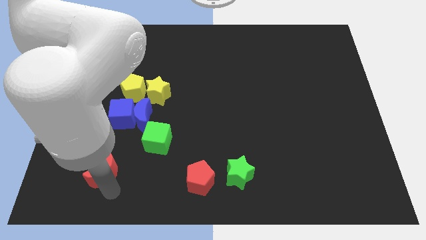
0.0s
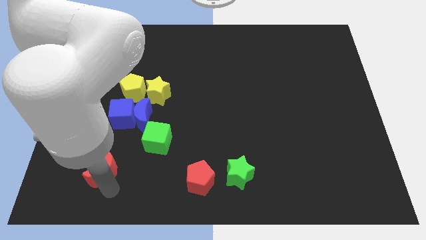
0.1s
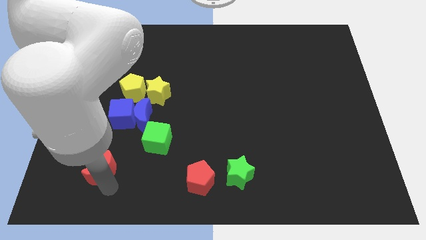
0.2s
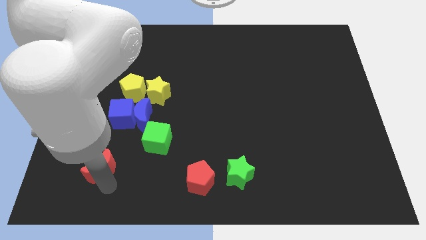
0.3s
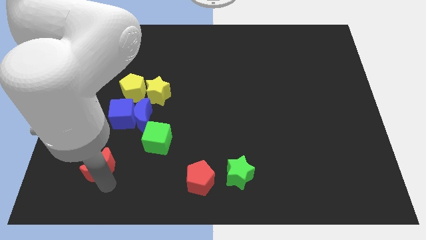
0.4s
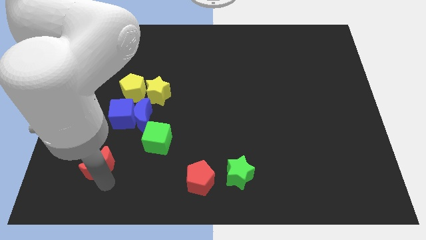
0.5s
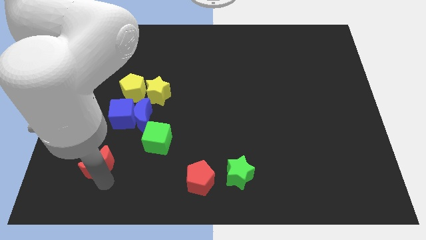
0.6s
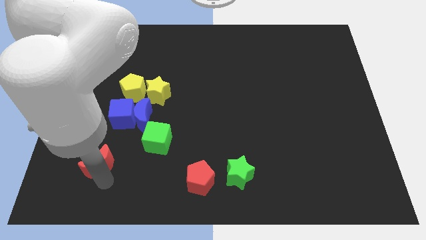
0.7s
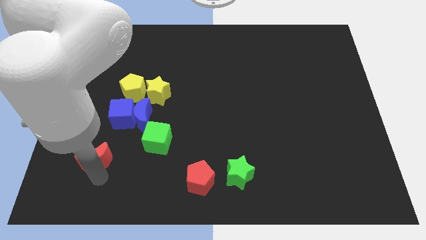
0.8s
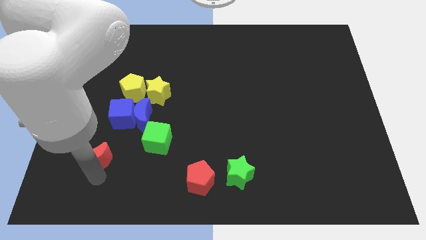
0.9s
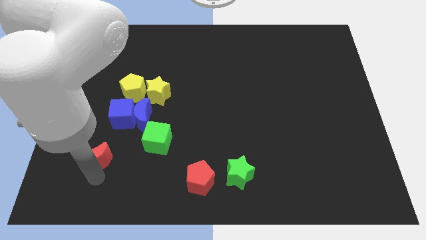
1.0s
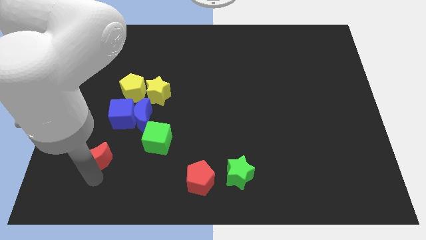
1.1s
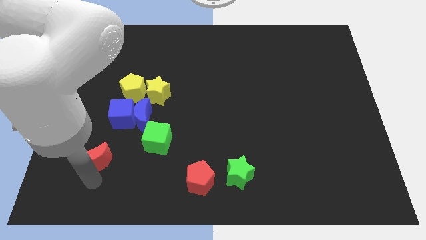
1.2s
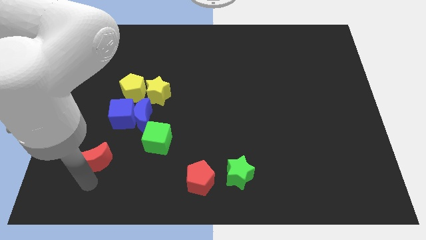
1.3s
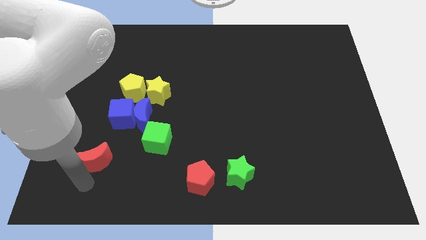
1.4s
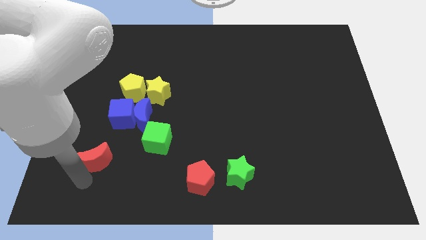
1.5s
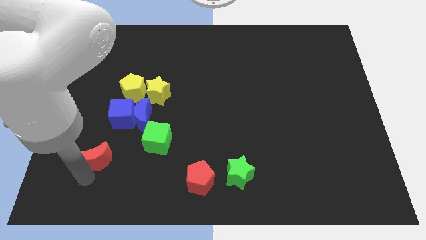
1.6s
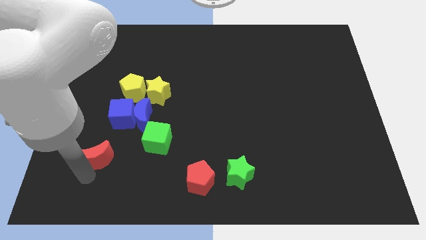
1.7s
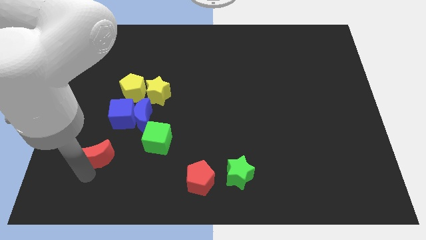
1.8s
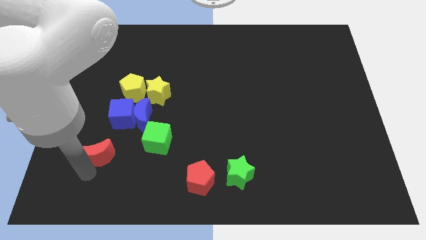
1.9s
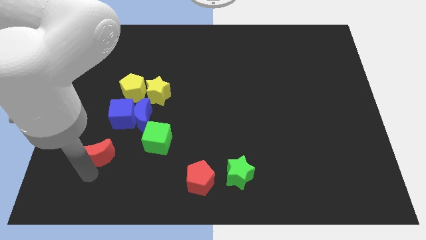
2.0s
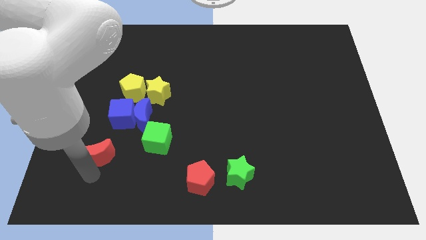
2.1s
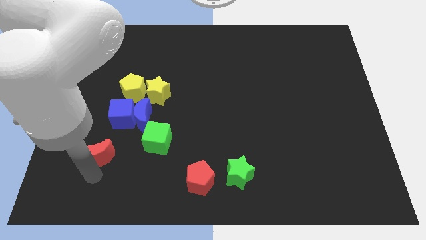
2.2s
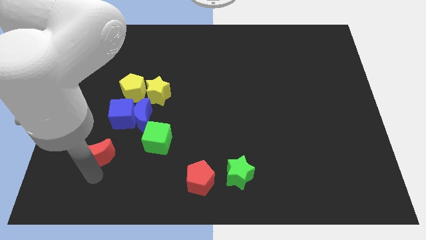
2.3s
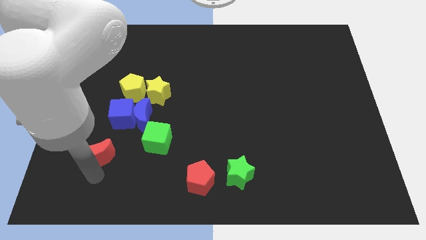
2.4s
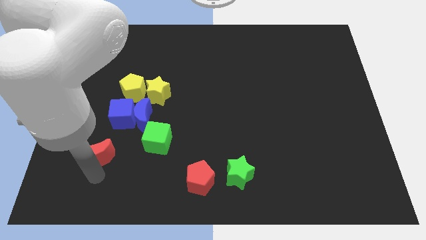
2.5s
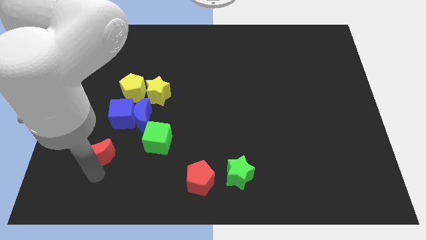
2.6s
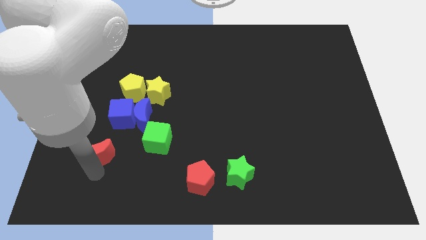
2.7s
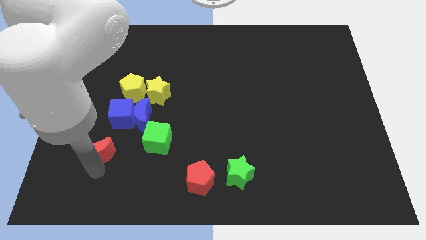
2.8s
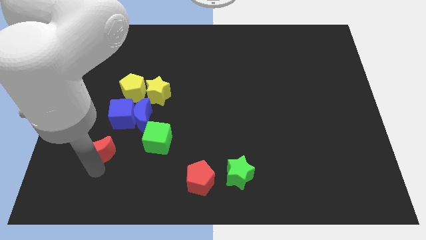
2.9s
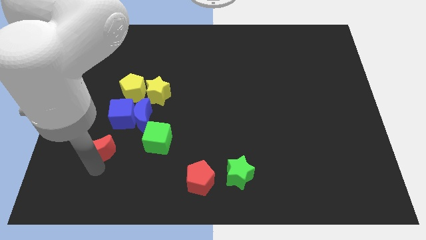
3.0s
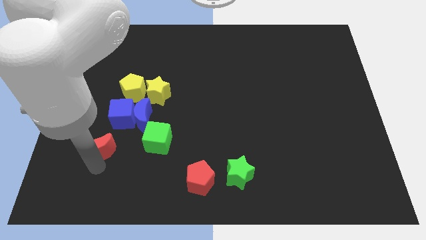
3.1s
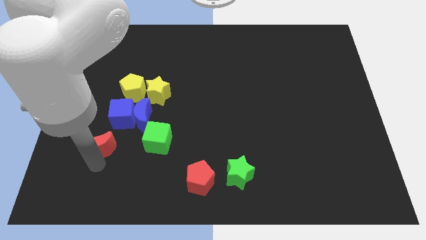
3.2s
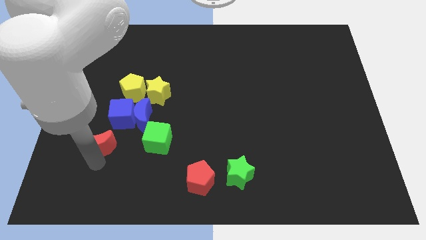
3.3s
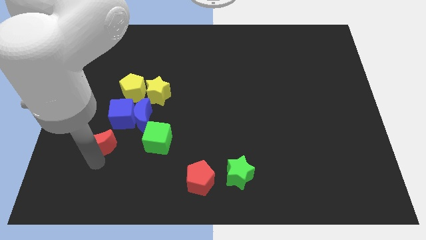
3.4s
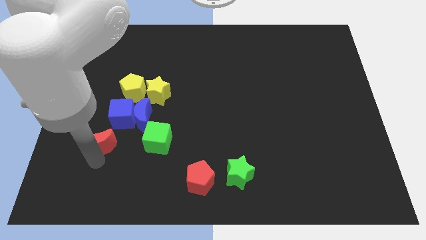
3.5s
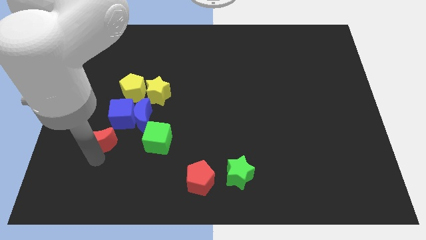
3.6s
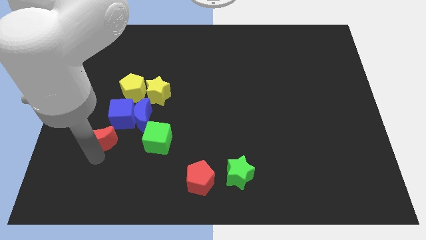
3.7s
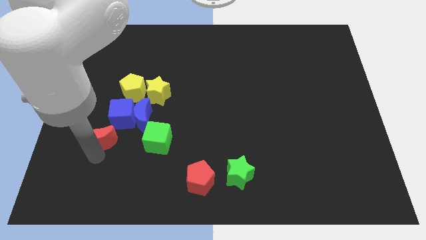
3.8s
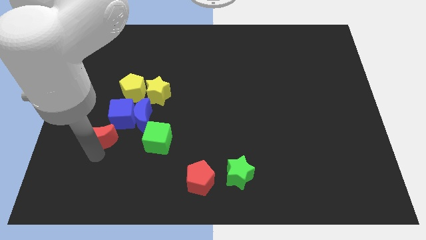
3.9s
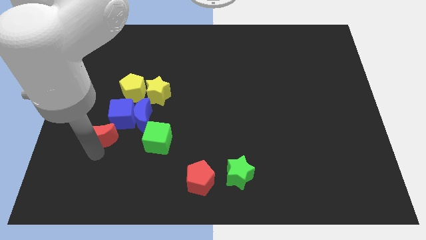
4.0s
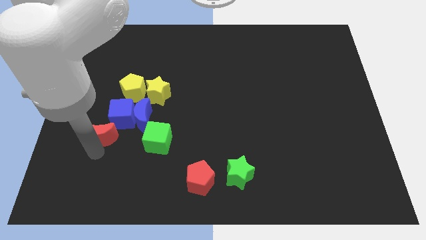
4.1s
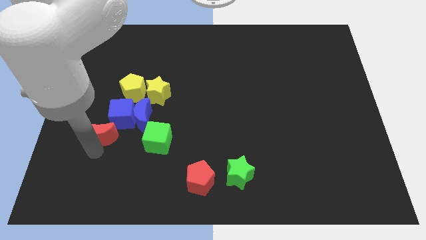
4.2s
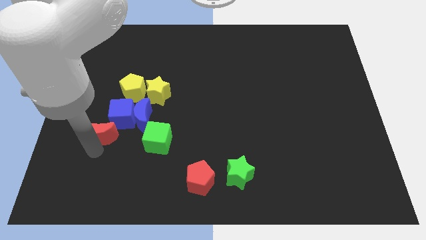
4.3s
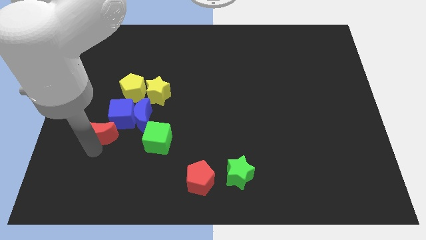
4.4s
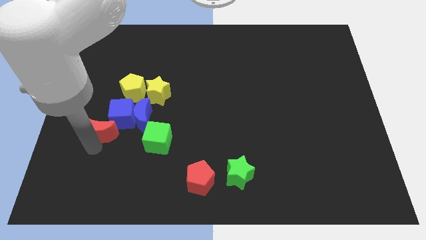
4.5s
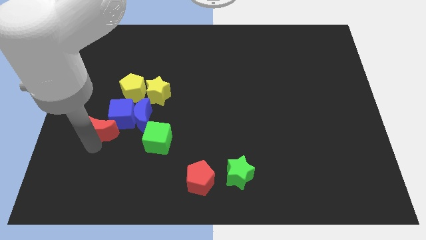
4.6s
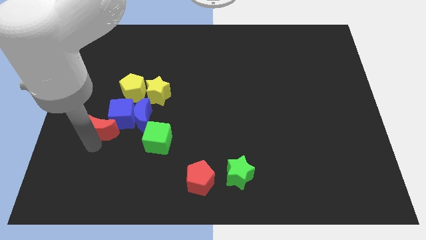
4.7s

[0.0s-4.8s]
place the red crescent below the blue cube

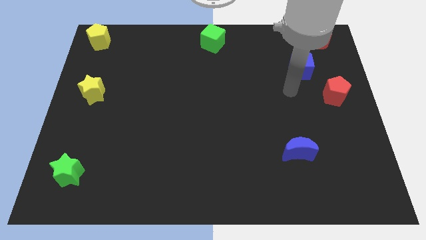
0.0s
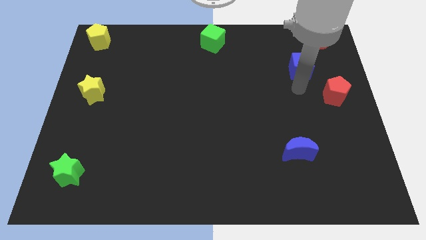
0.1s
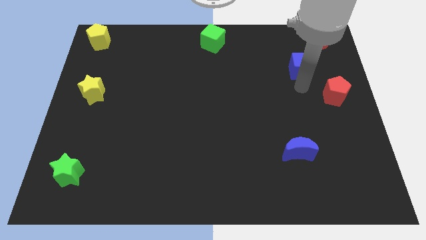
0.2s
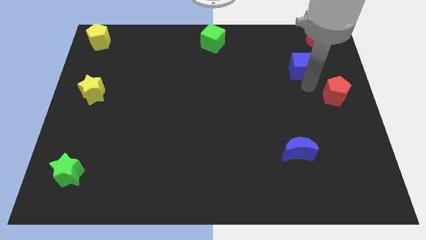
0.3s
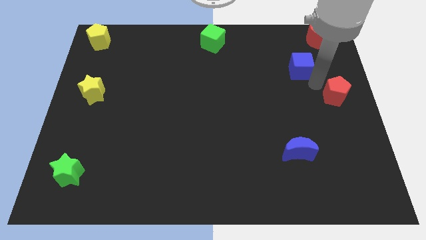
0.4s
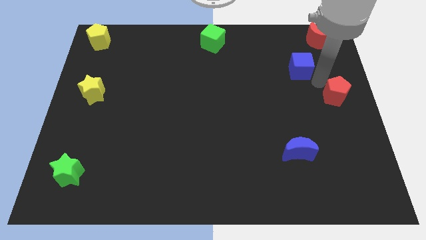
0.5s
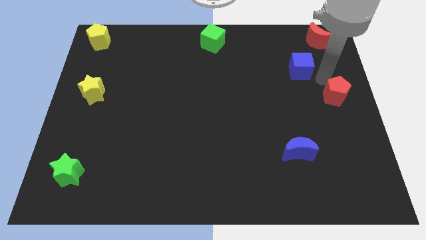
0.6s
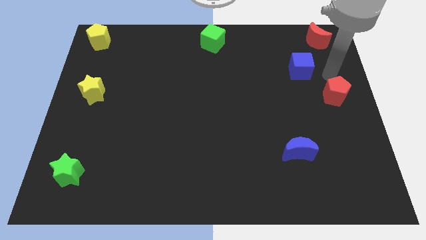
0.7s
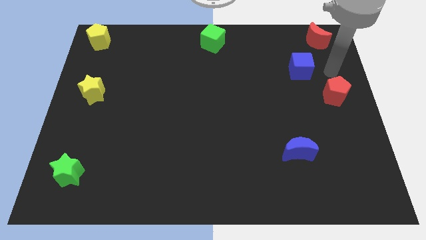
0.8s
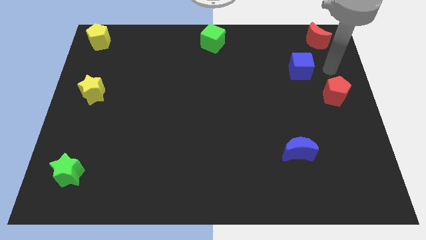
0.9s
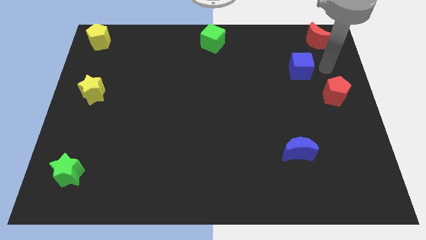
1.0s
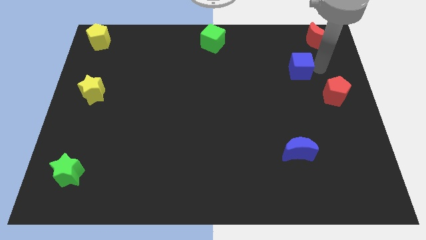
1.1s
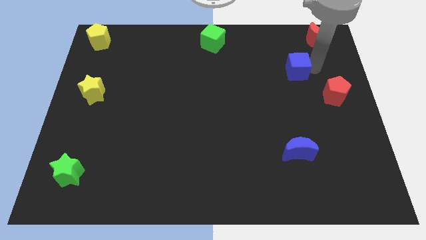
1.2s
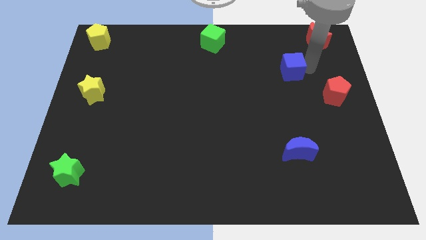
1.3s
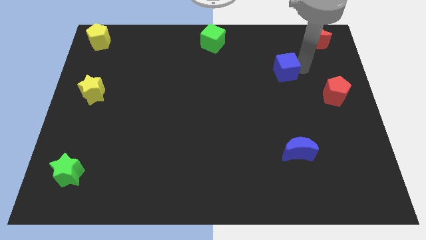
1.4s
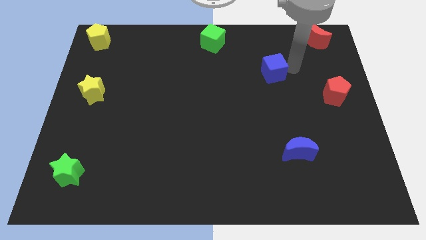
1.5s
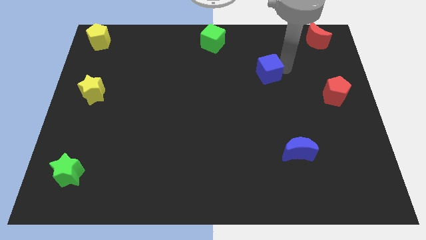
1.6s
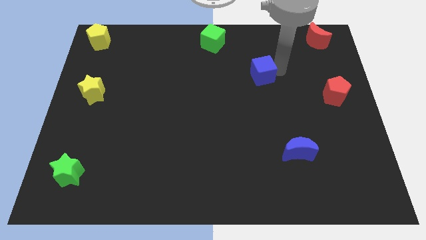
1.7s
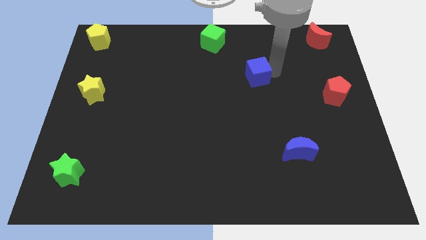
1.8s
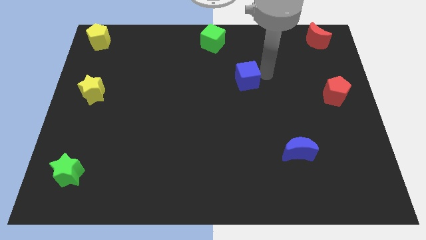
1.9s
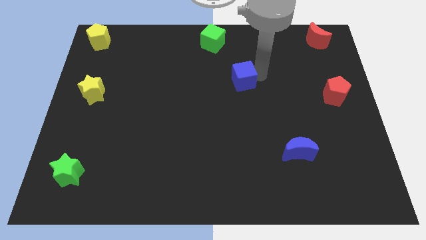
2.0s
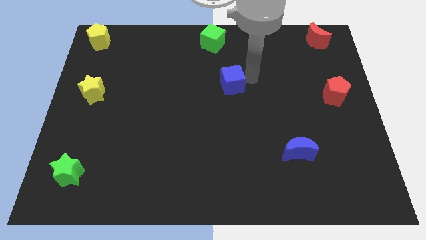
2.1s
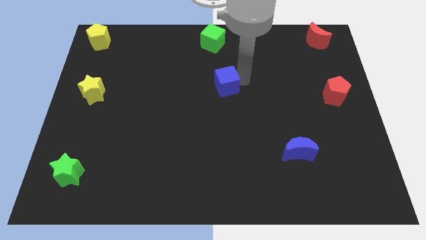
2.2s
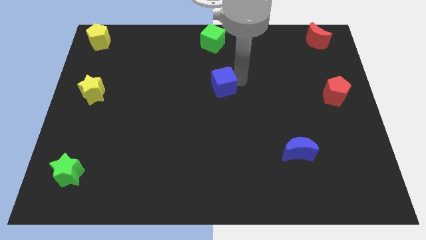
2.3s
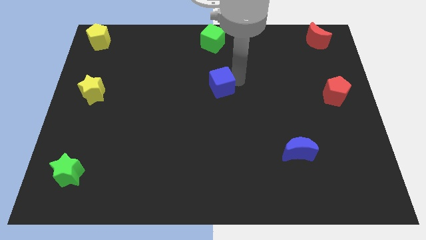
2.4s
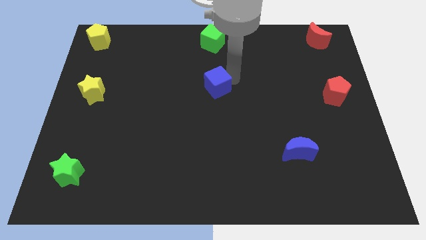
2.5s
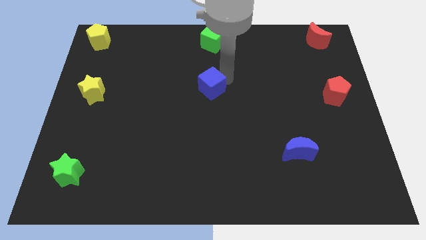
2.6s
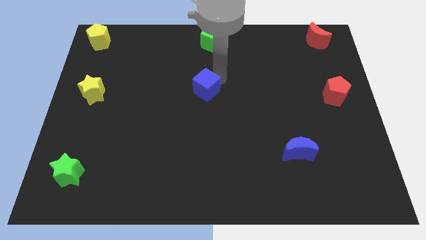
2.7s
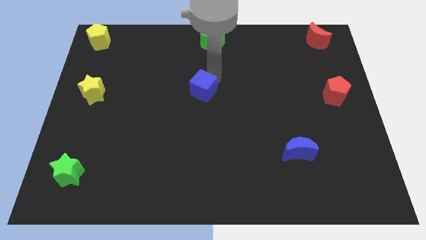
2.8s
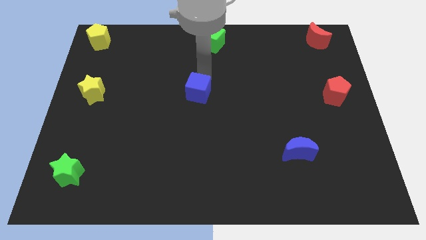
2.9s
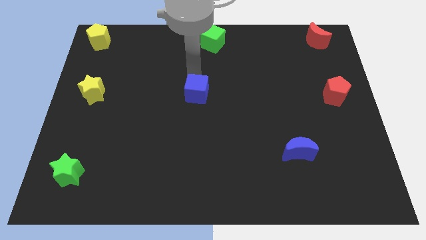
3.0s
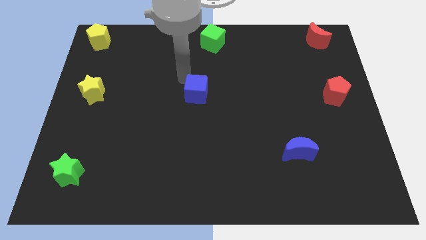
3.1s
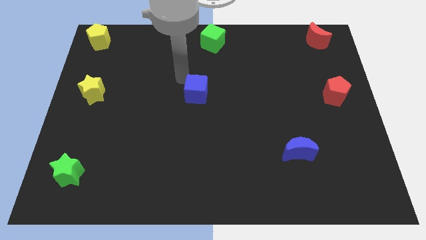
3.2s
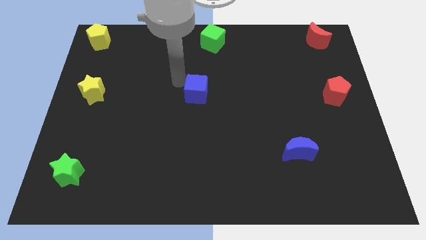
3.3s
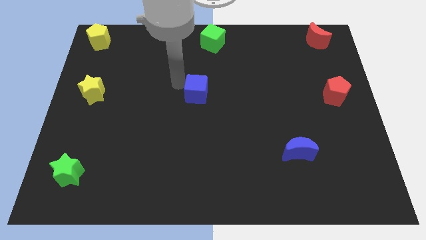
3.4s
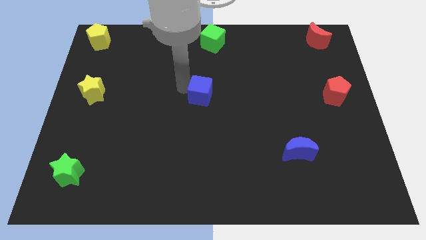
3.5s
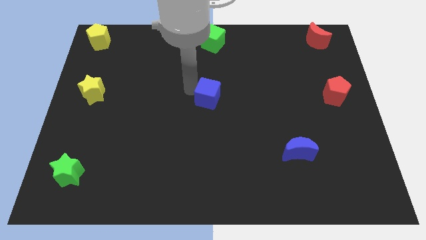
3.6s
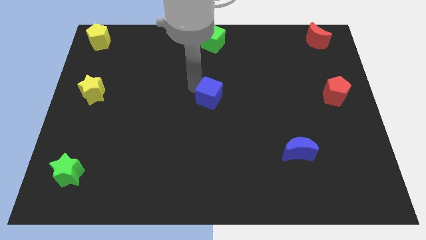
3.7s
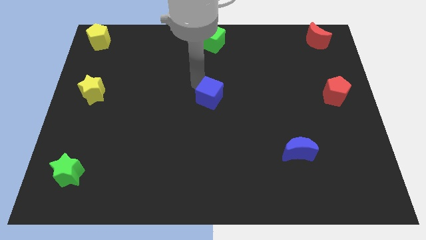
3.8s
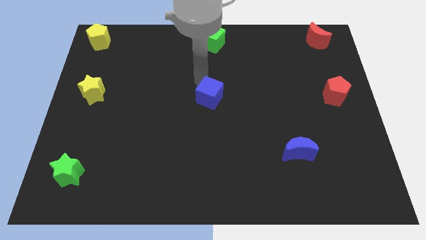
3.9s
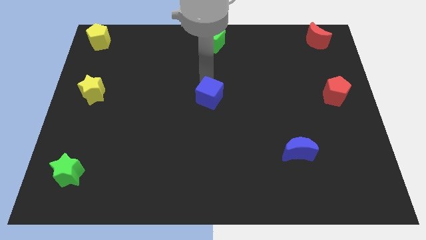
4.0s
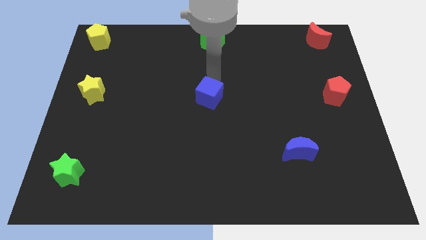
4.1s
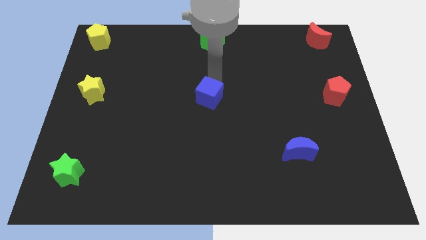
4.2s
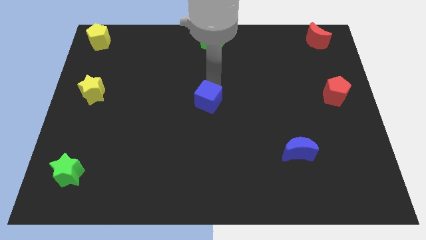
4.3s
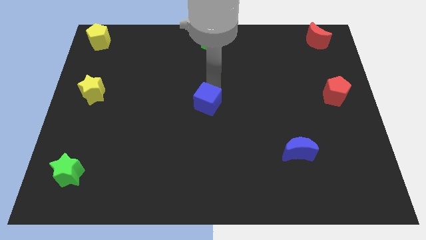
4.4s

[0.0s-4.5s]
move the blue cube to the center of the board
